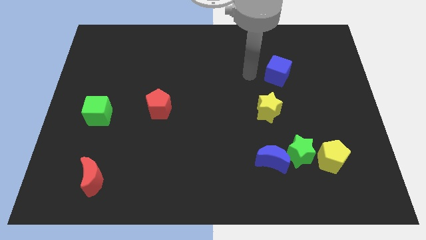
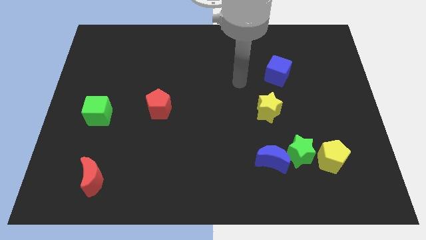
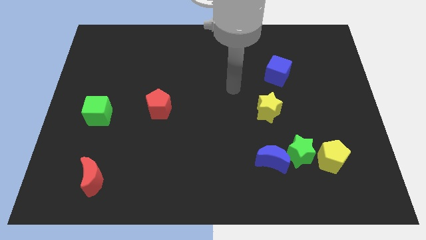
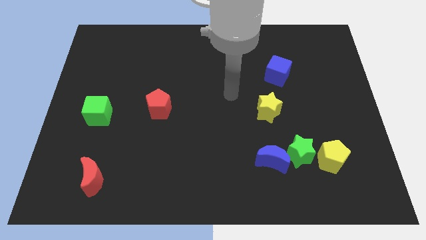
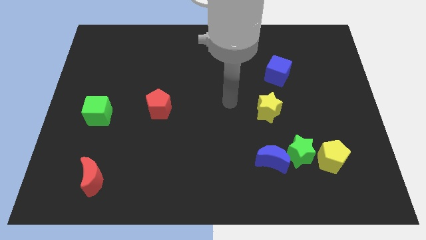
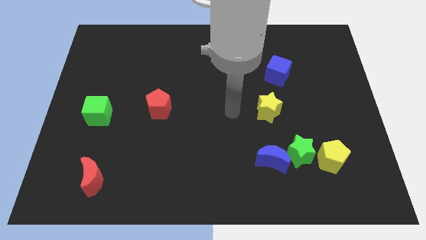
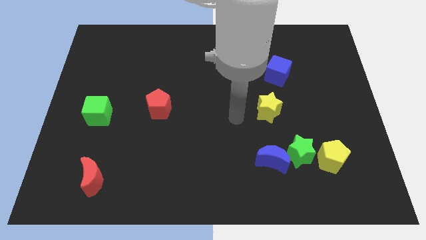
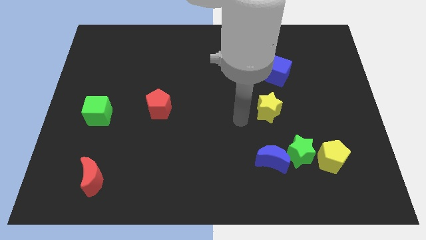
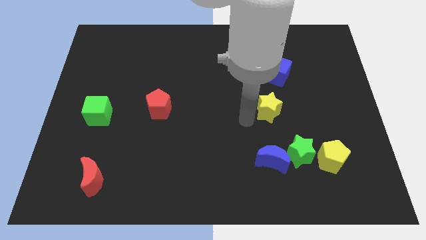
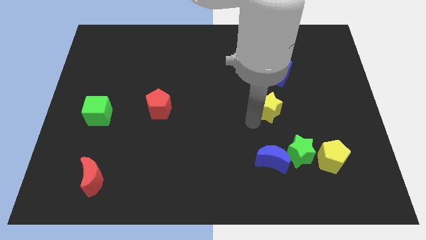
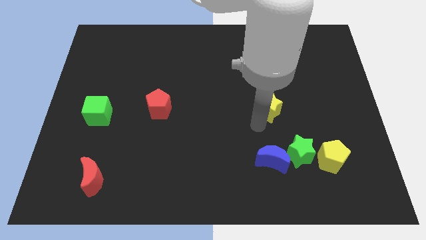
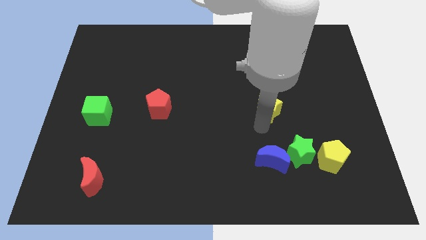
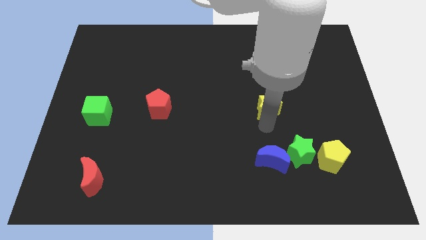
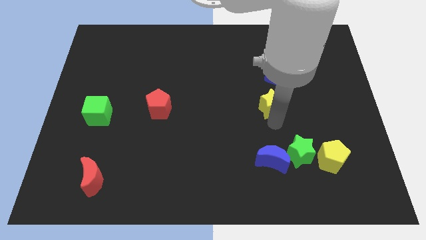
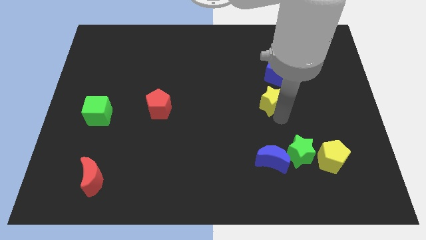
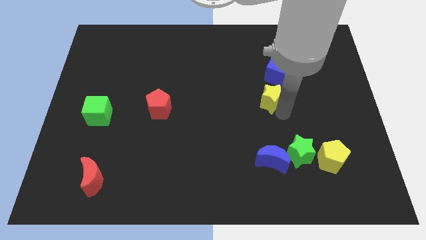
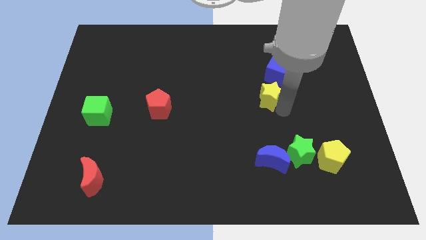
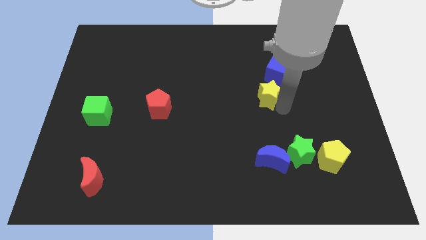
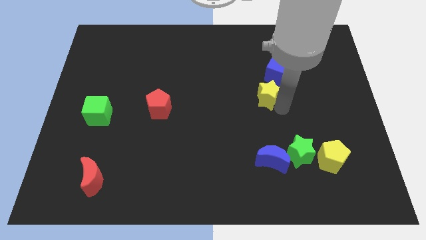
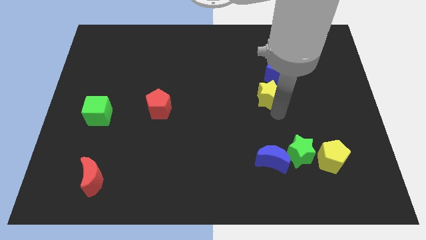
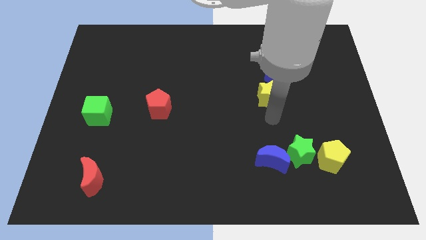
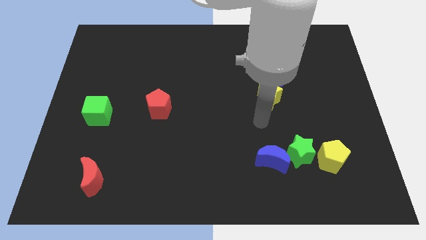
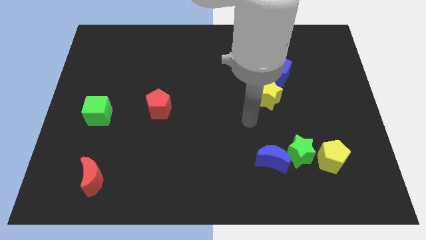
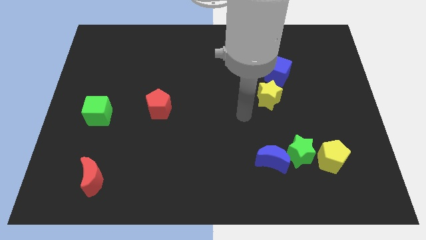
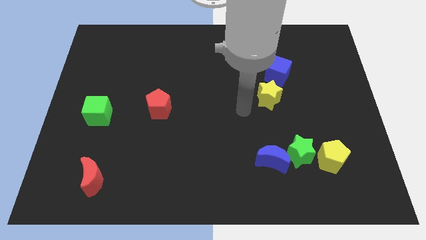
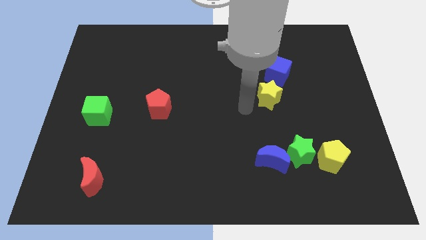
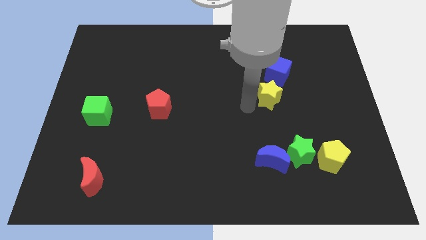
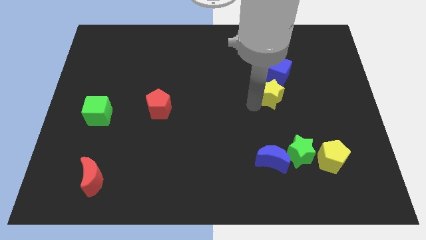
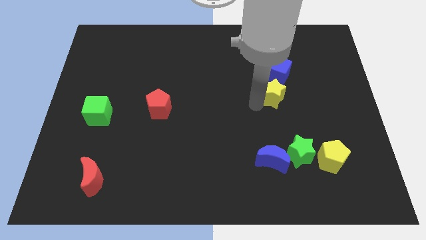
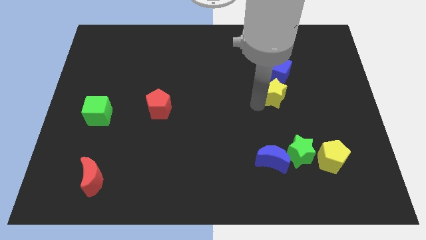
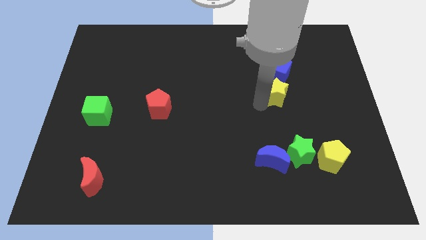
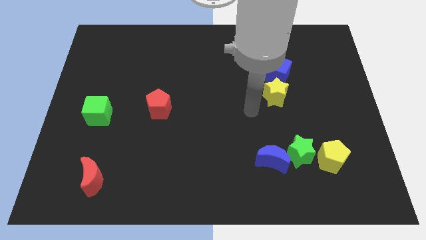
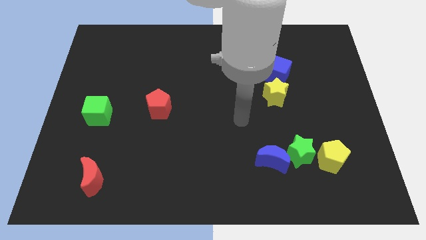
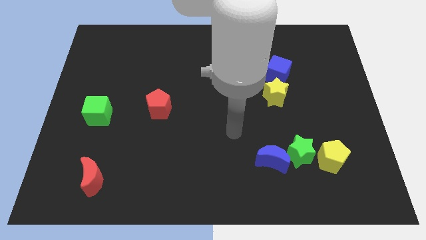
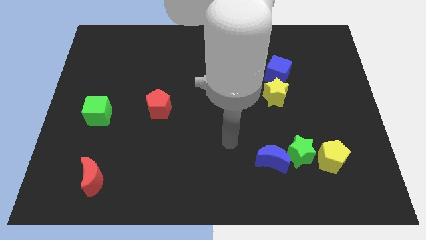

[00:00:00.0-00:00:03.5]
push the yellow star upwards slightly

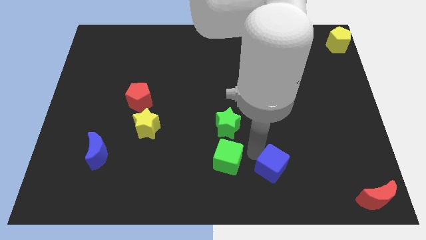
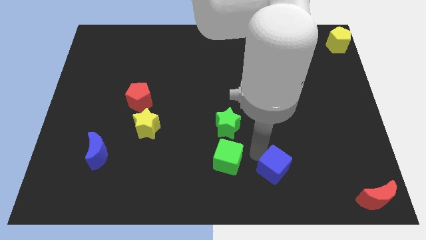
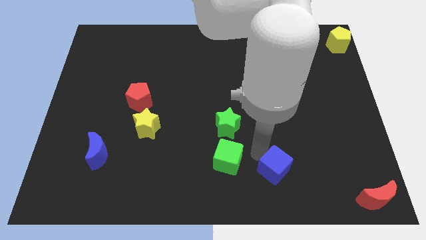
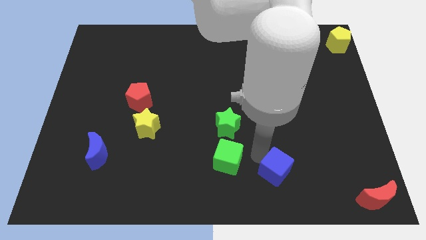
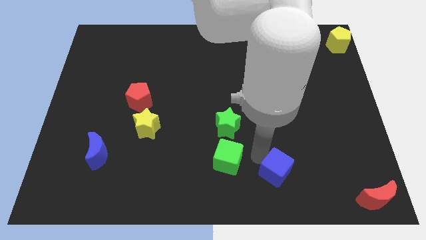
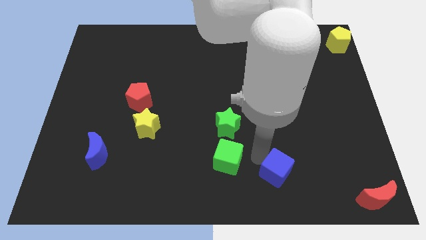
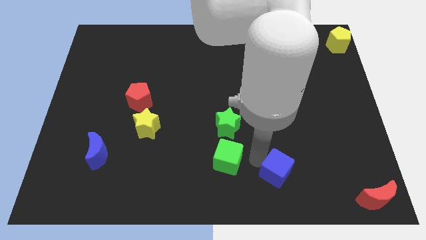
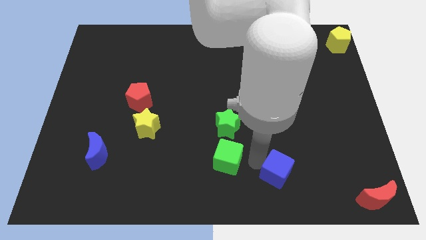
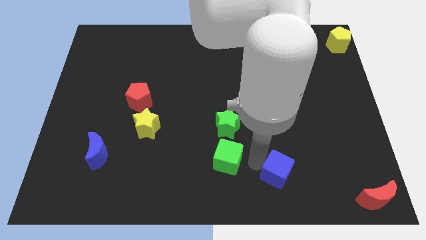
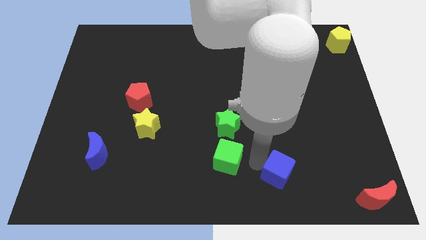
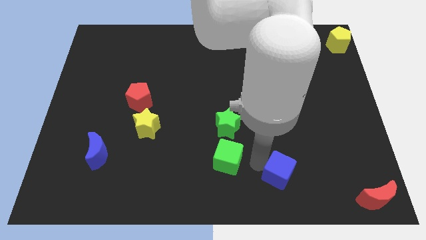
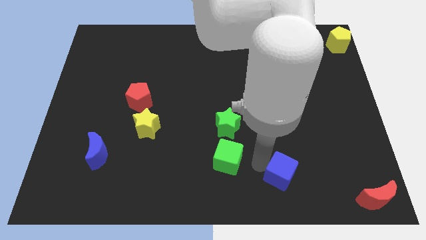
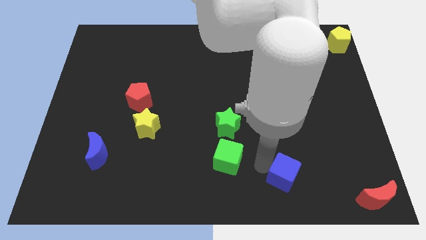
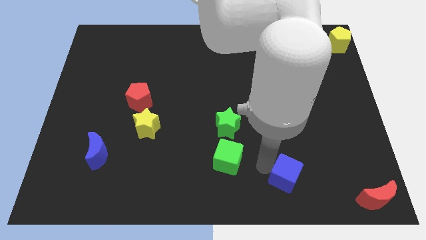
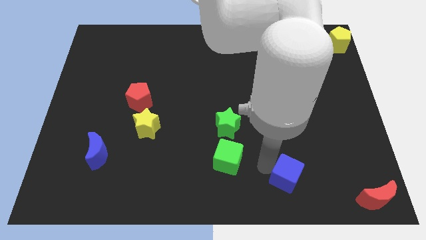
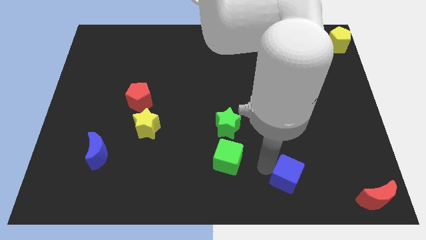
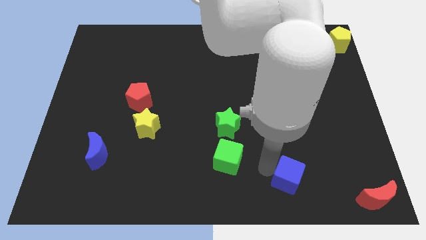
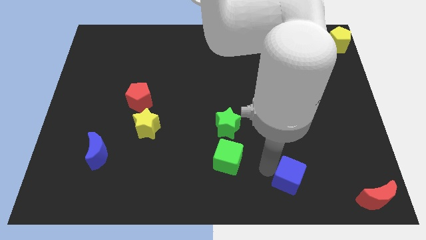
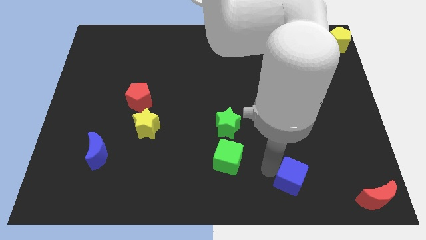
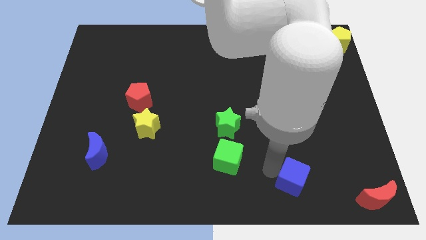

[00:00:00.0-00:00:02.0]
separate blue cube from green cube

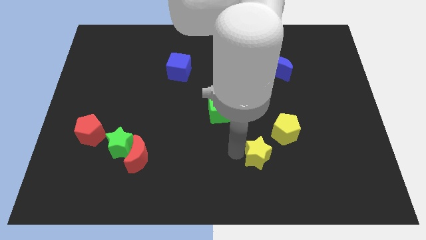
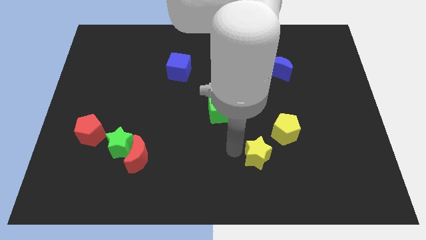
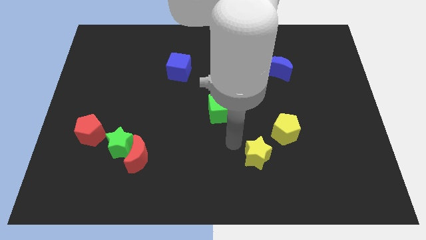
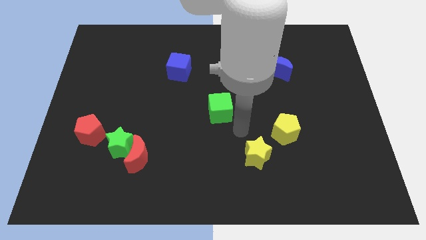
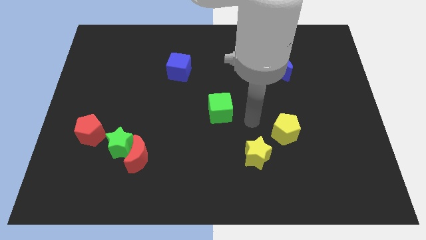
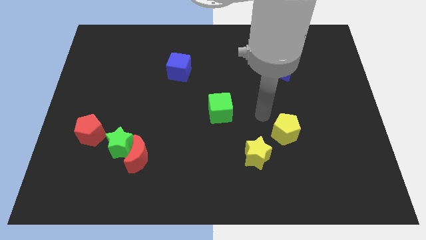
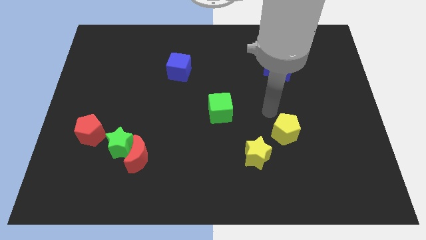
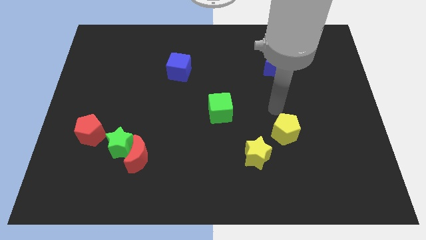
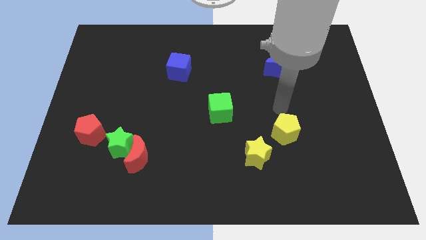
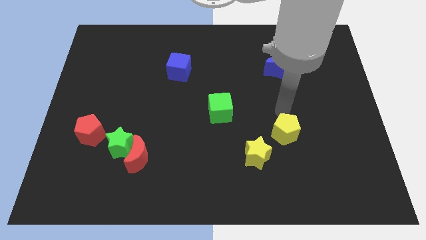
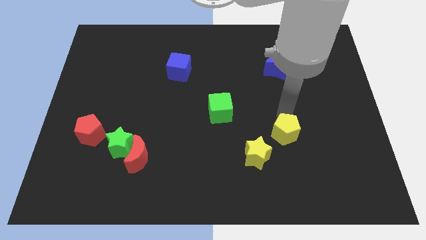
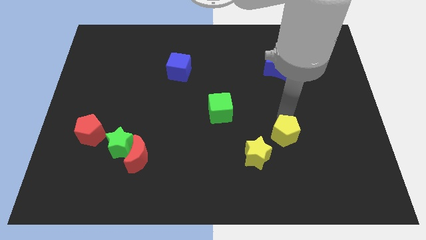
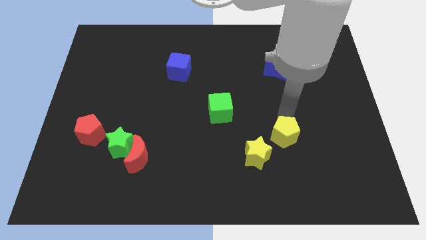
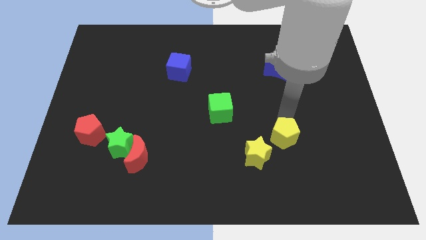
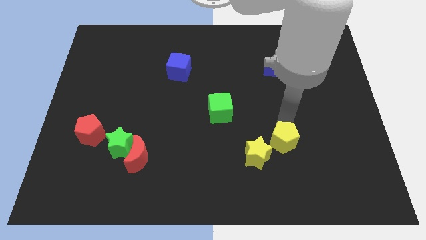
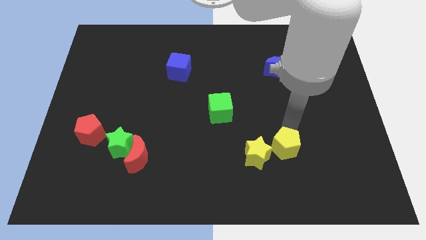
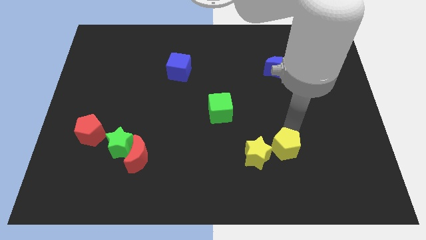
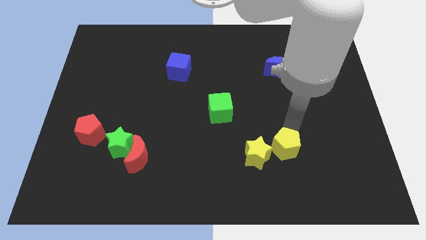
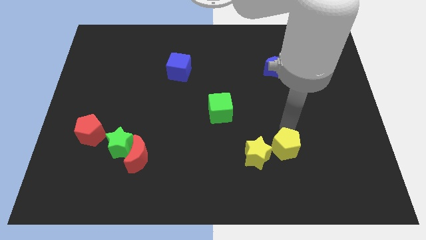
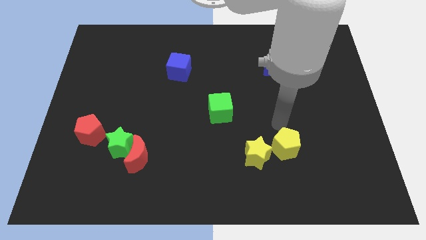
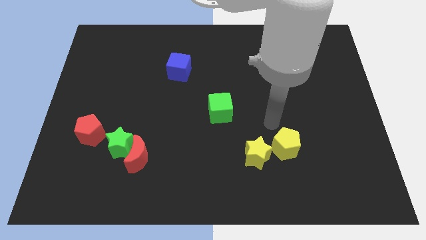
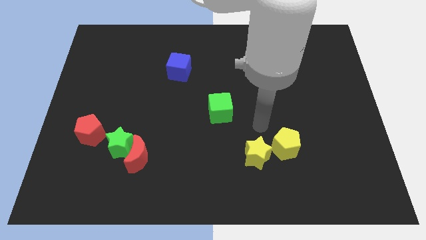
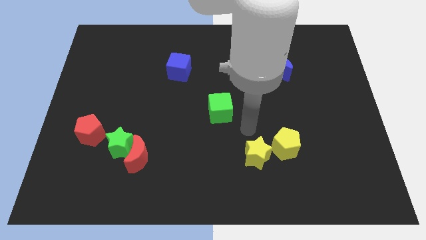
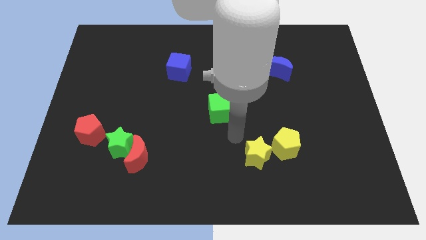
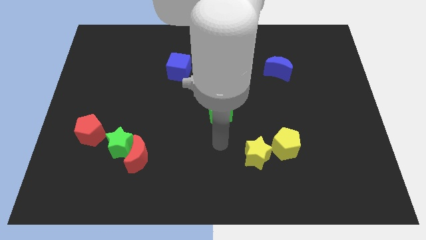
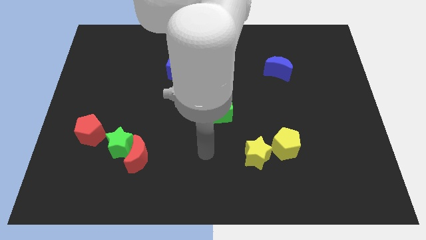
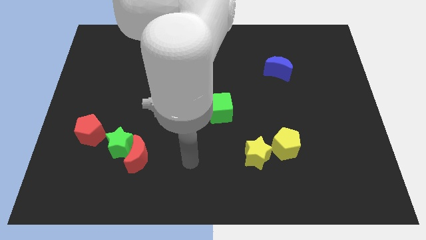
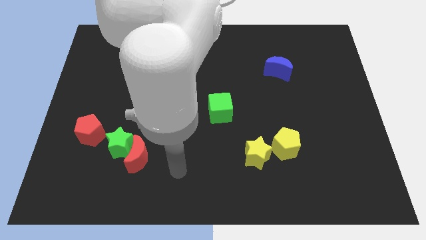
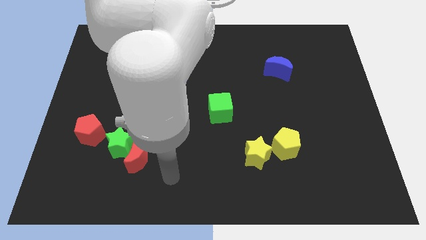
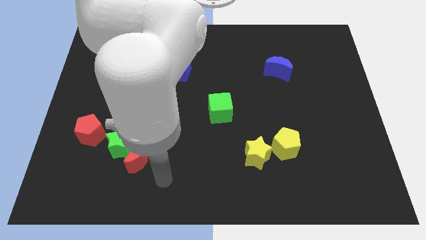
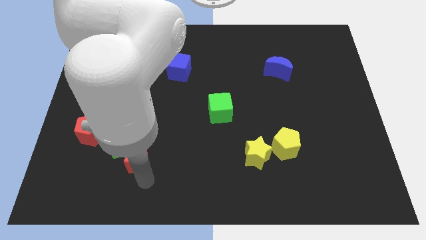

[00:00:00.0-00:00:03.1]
push the yellow pentagon slightly downwards

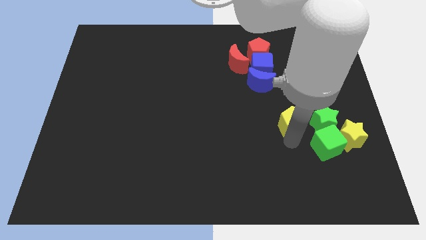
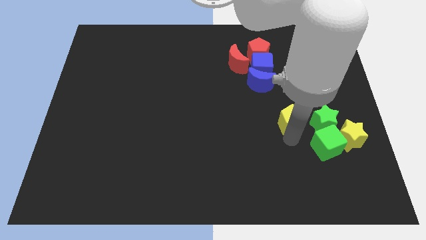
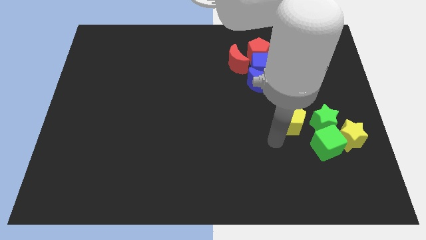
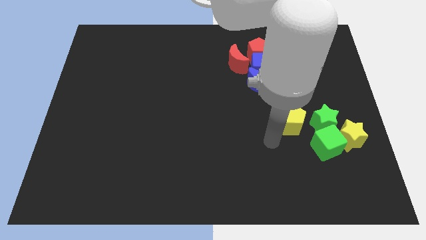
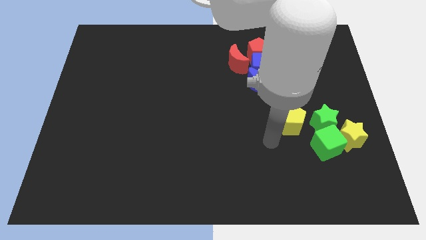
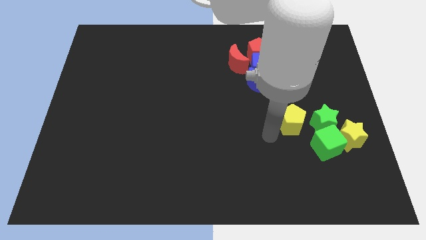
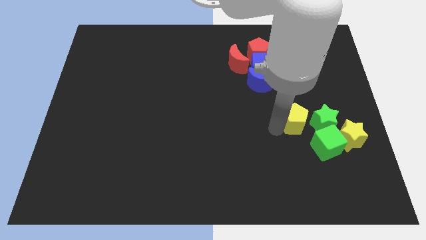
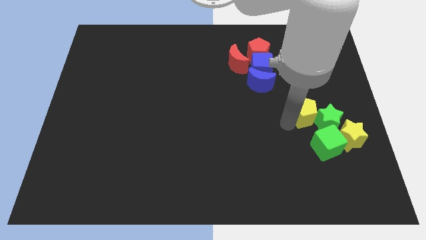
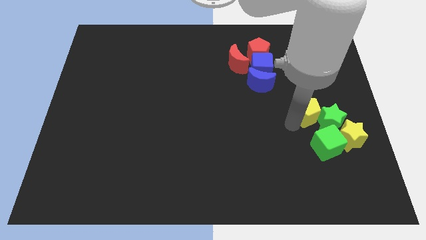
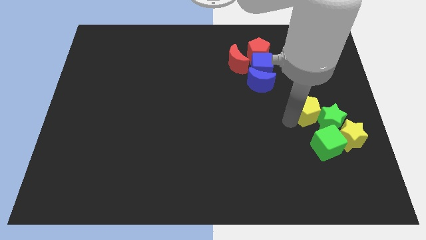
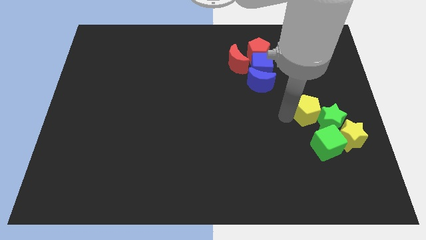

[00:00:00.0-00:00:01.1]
move the yellow pentagon to the left side of the green star
